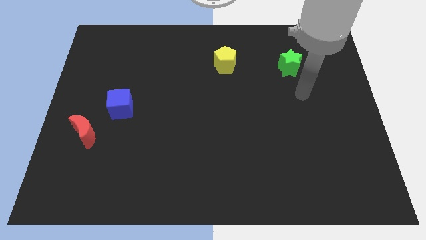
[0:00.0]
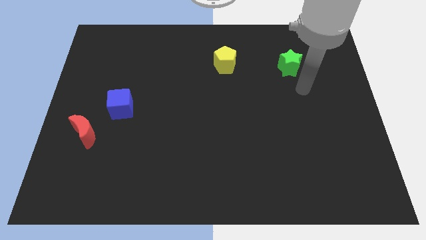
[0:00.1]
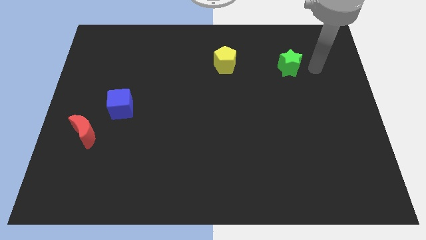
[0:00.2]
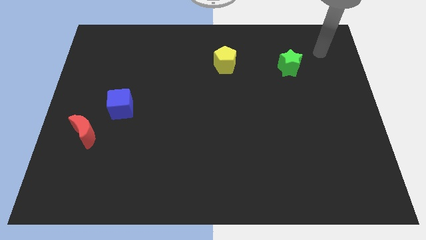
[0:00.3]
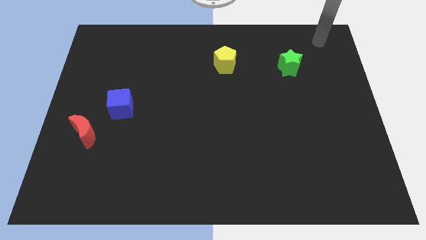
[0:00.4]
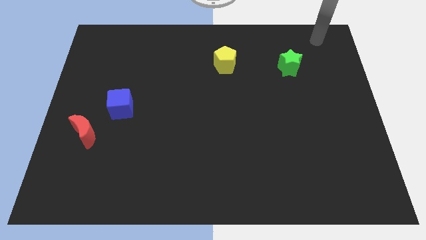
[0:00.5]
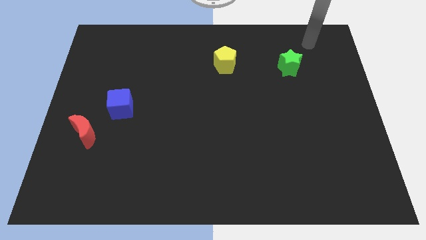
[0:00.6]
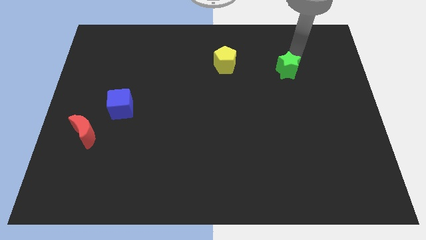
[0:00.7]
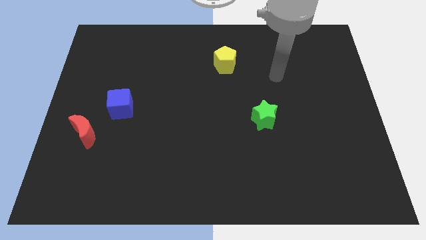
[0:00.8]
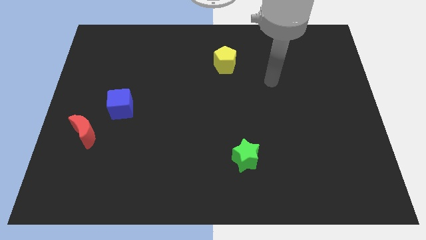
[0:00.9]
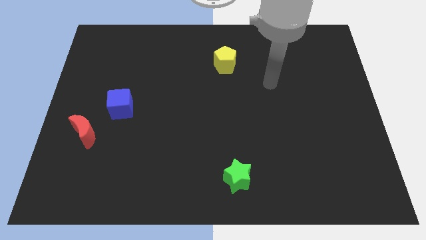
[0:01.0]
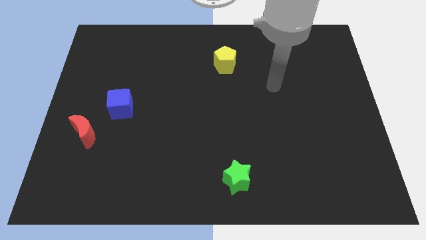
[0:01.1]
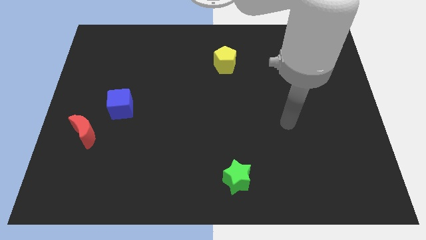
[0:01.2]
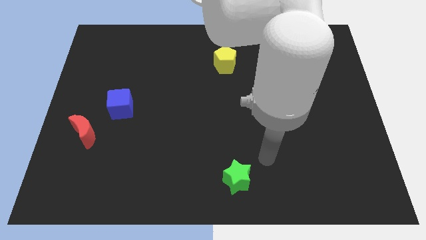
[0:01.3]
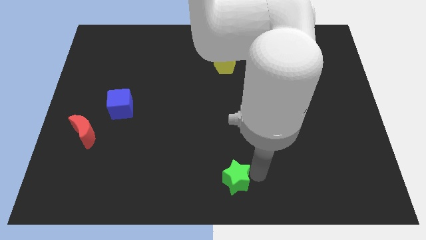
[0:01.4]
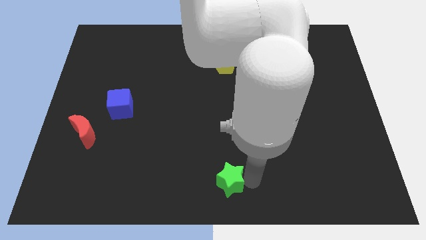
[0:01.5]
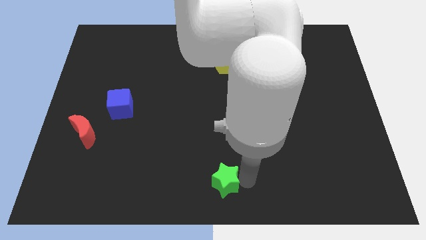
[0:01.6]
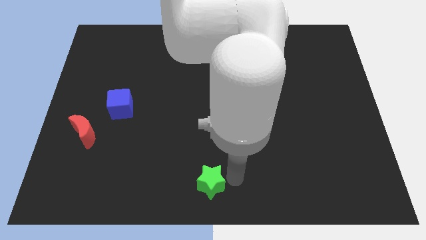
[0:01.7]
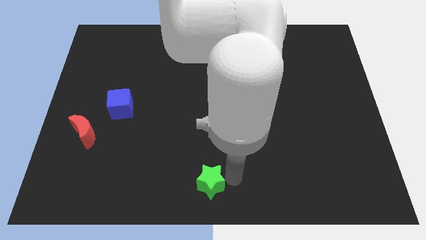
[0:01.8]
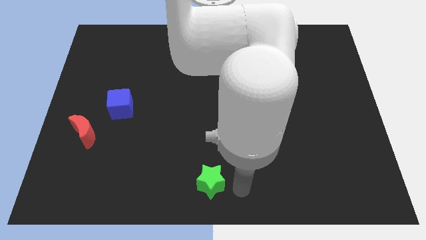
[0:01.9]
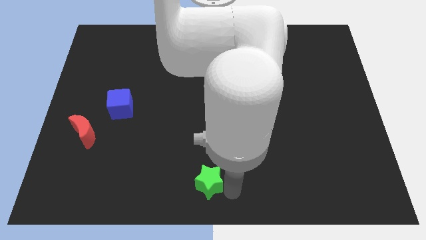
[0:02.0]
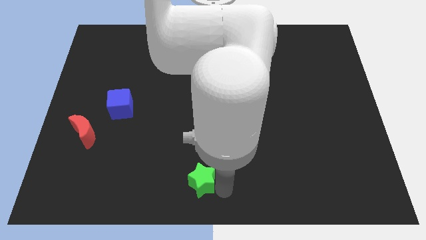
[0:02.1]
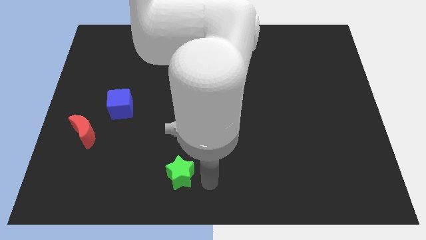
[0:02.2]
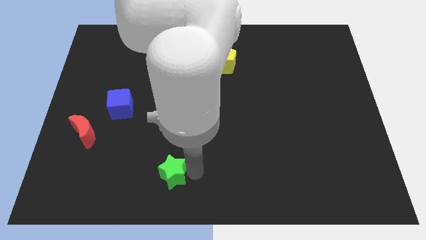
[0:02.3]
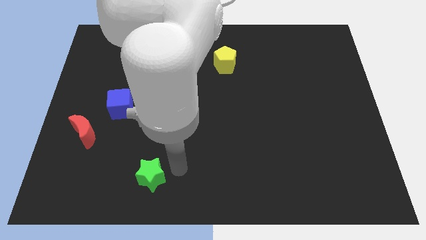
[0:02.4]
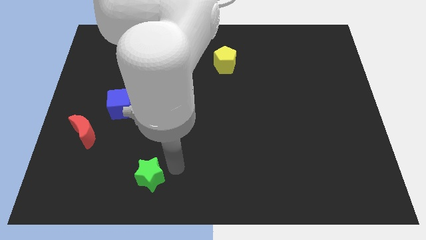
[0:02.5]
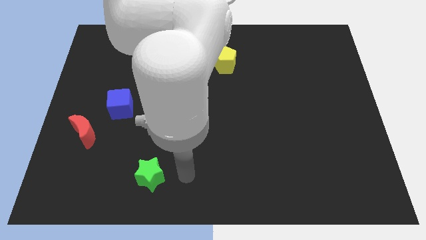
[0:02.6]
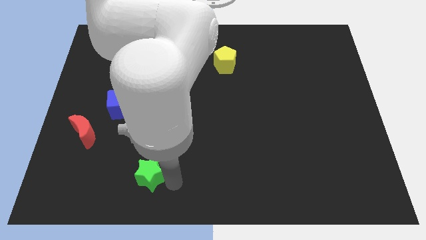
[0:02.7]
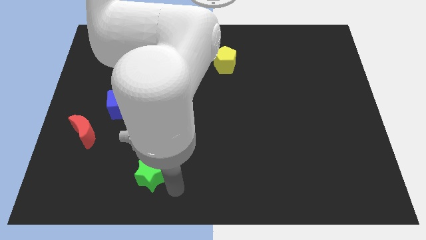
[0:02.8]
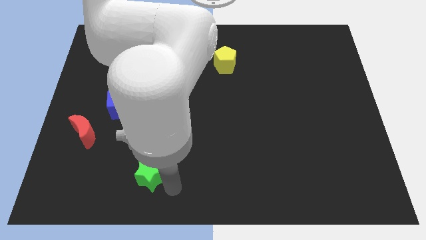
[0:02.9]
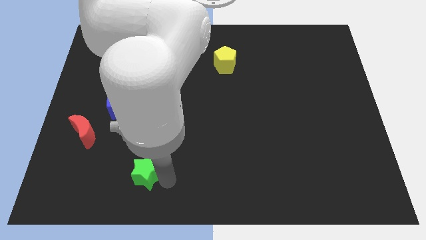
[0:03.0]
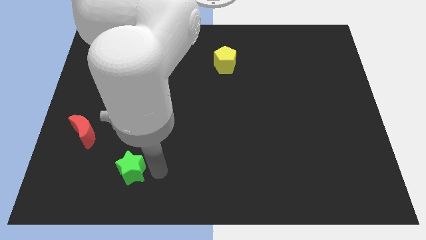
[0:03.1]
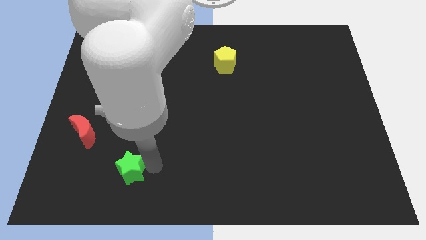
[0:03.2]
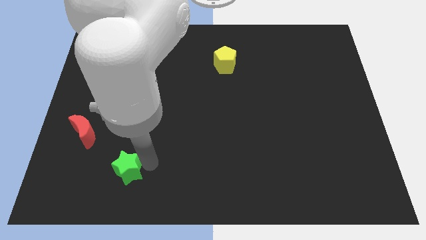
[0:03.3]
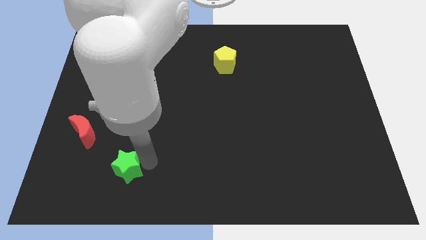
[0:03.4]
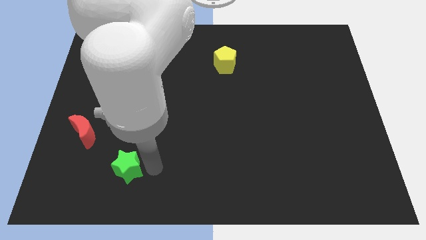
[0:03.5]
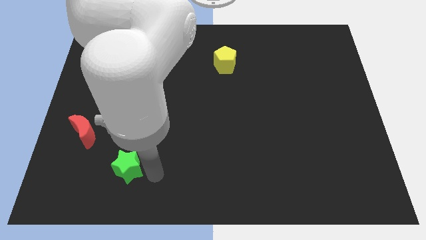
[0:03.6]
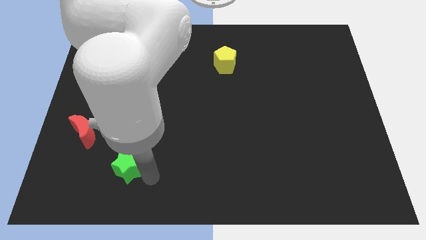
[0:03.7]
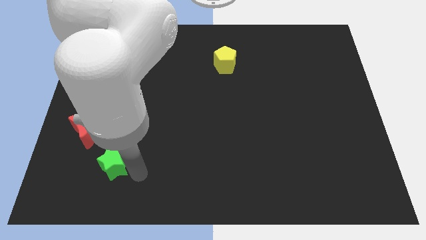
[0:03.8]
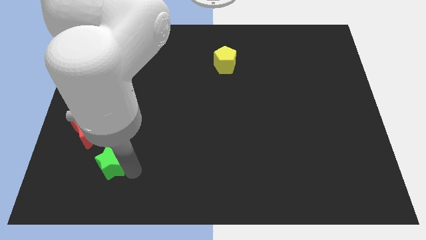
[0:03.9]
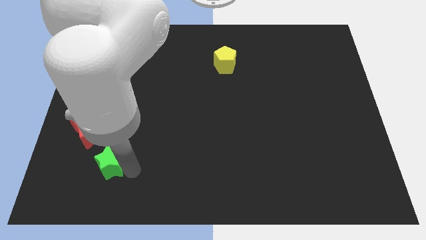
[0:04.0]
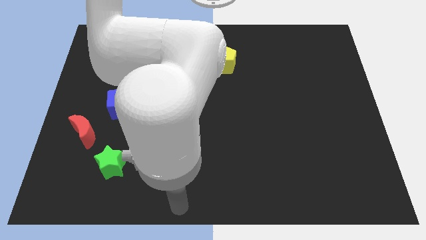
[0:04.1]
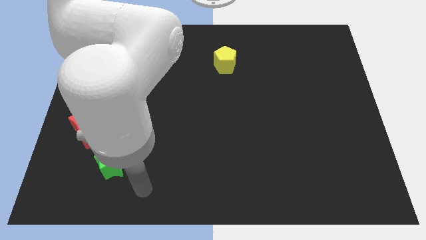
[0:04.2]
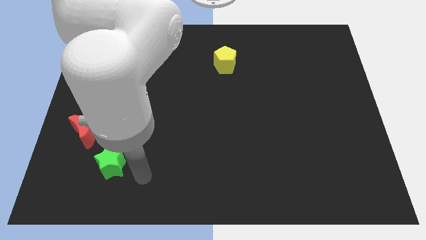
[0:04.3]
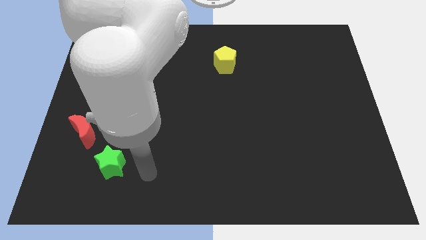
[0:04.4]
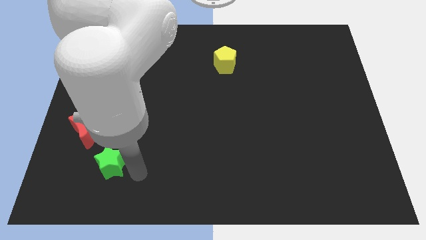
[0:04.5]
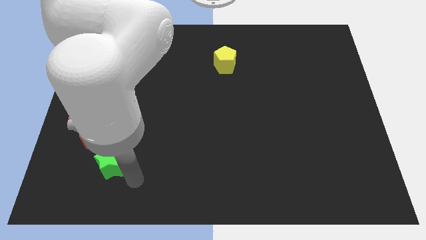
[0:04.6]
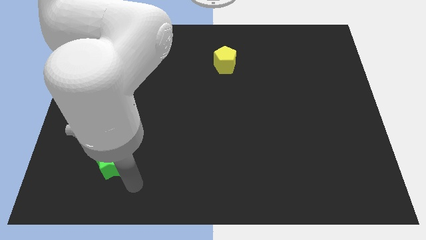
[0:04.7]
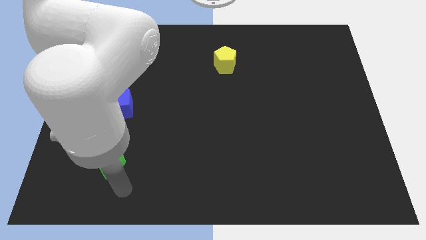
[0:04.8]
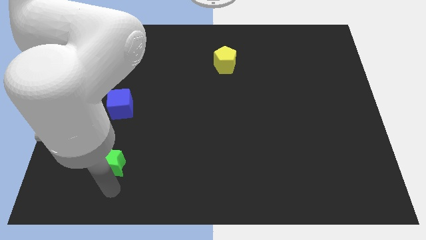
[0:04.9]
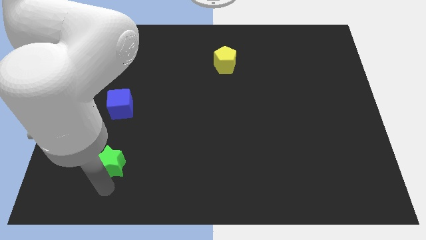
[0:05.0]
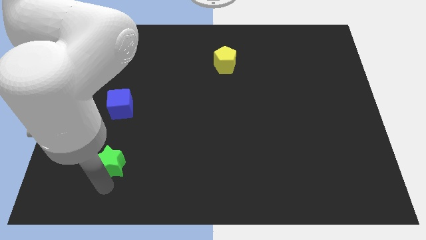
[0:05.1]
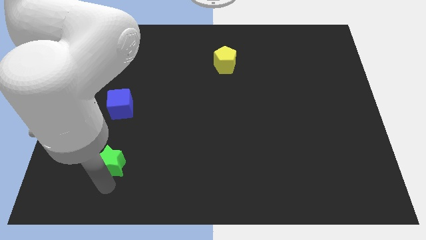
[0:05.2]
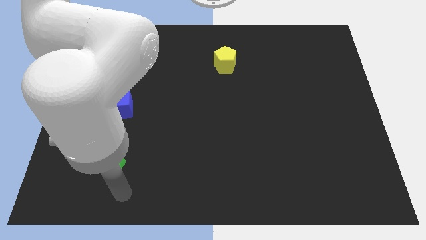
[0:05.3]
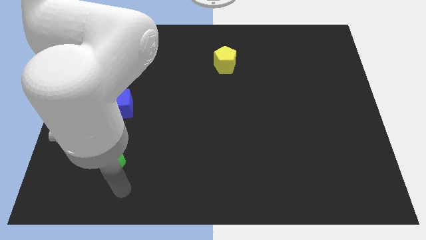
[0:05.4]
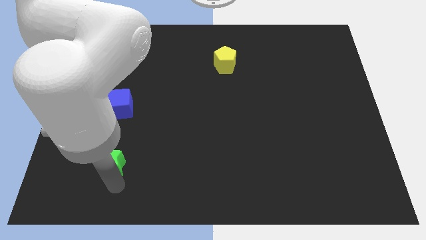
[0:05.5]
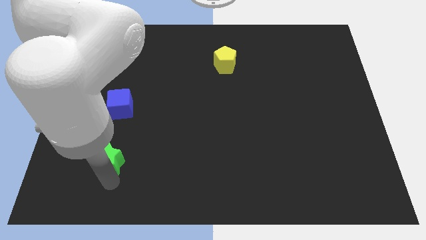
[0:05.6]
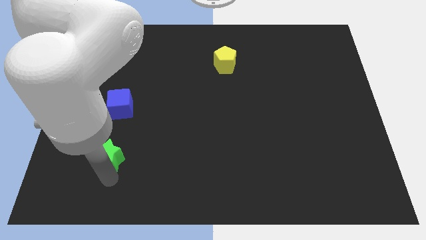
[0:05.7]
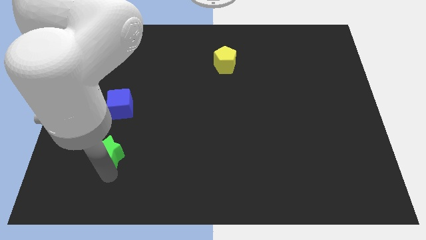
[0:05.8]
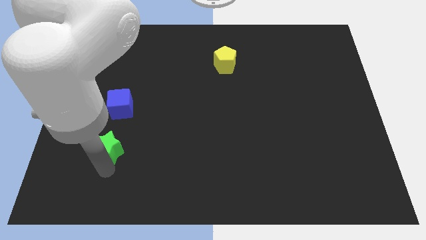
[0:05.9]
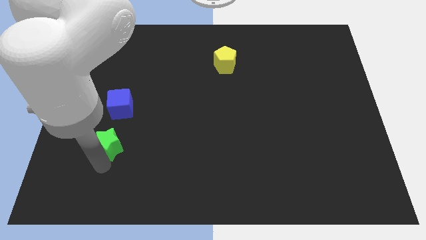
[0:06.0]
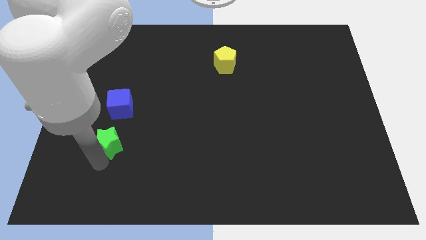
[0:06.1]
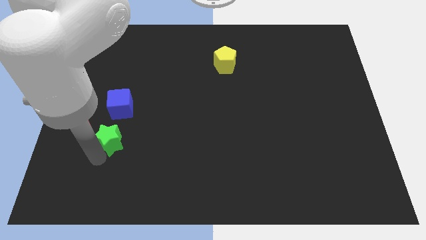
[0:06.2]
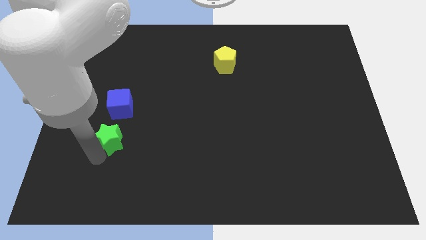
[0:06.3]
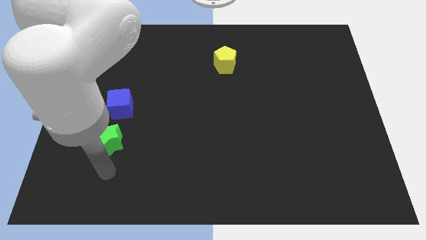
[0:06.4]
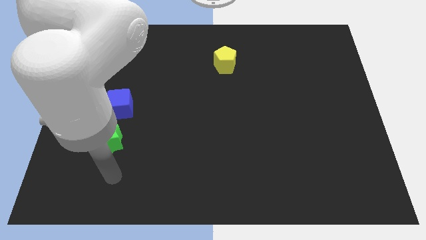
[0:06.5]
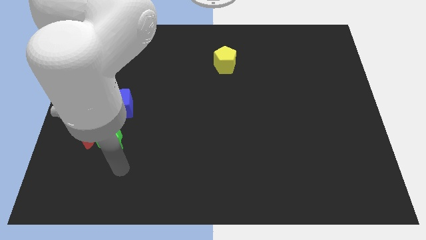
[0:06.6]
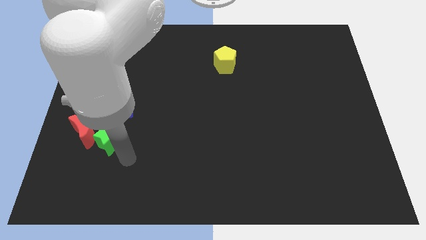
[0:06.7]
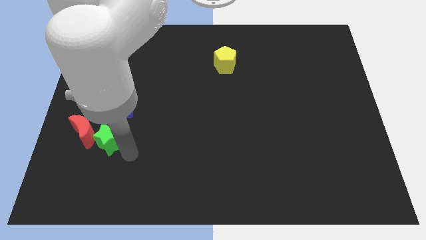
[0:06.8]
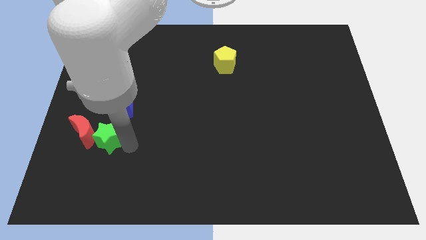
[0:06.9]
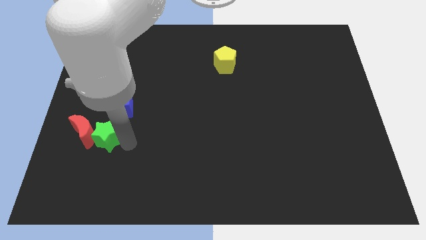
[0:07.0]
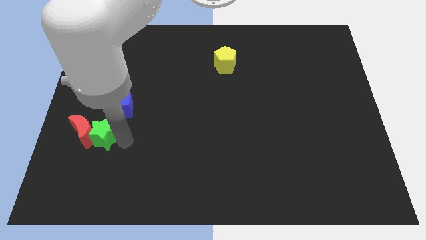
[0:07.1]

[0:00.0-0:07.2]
push the green block close to the moon

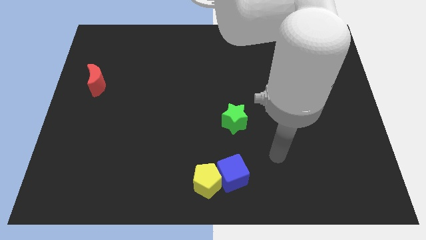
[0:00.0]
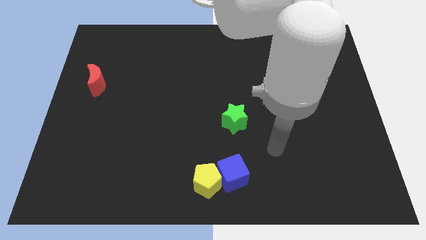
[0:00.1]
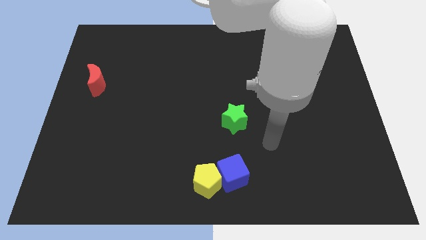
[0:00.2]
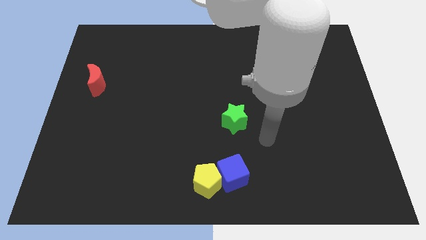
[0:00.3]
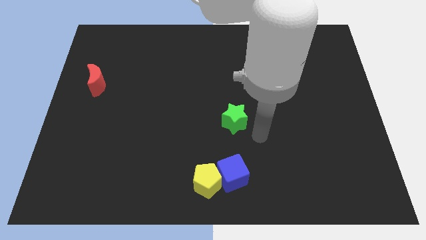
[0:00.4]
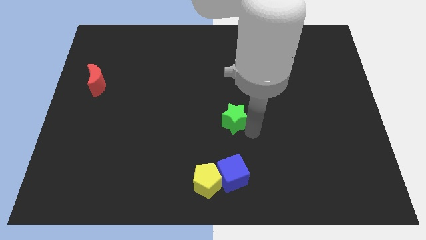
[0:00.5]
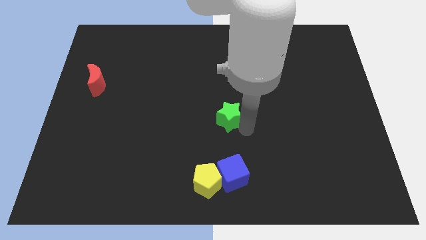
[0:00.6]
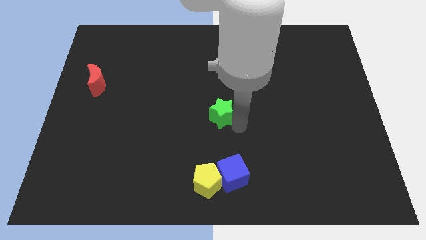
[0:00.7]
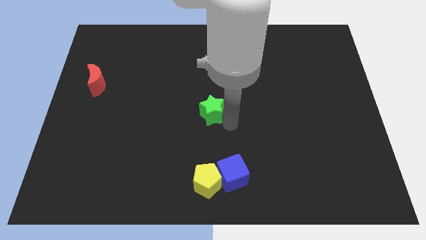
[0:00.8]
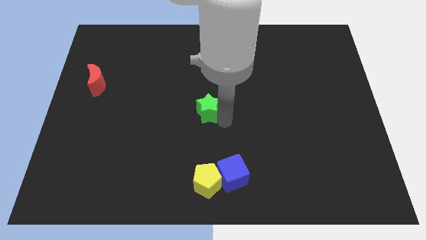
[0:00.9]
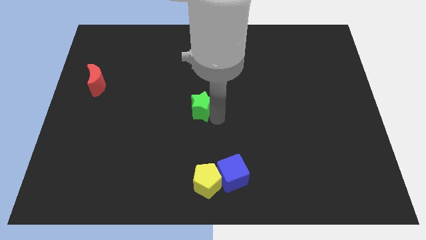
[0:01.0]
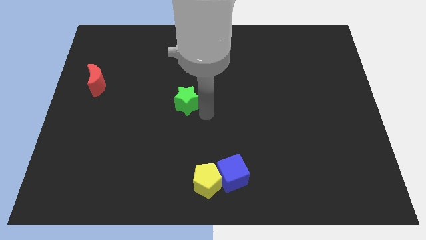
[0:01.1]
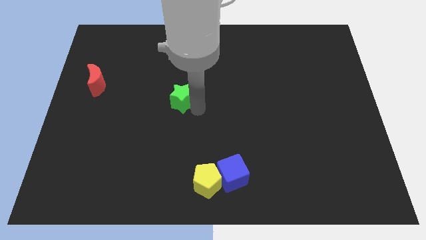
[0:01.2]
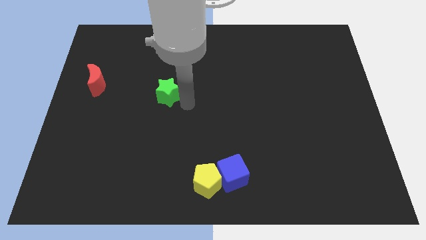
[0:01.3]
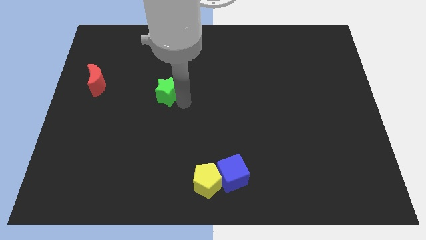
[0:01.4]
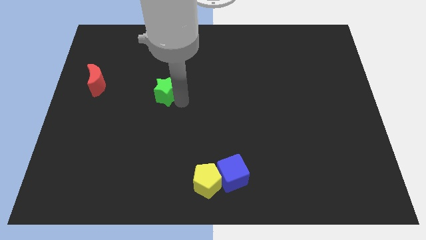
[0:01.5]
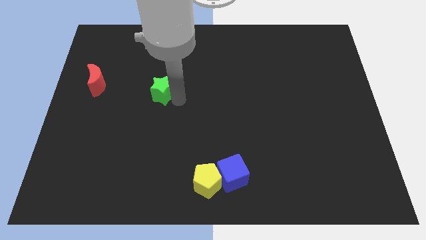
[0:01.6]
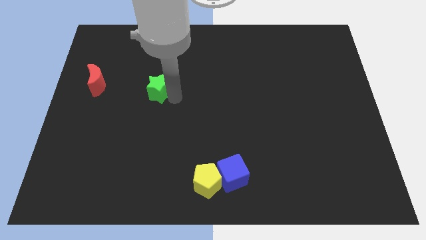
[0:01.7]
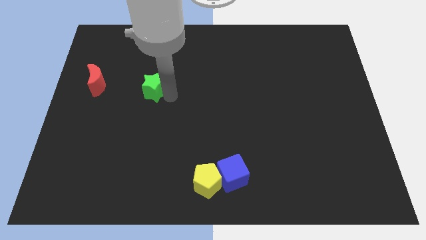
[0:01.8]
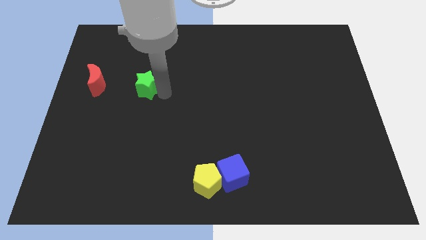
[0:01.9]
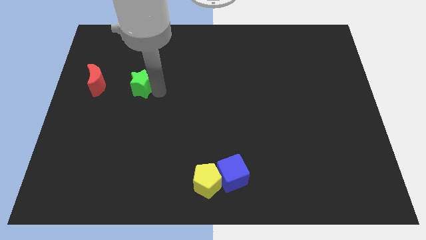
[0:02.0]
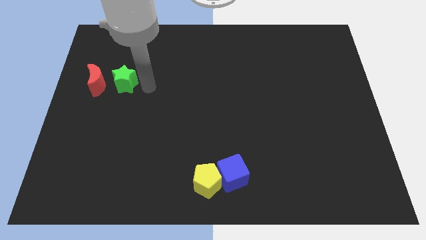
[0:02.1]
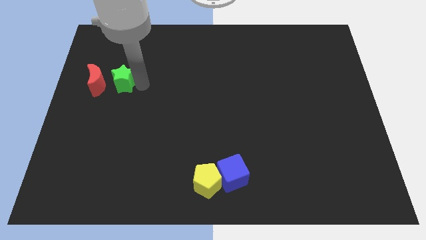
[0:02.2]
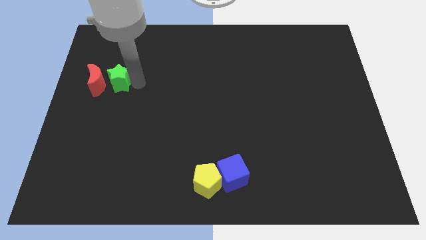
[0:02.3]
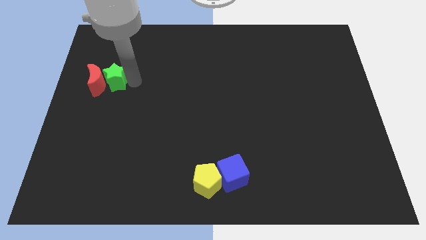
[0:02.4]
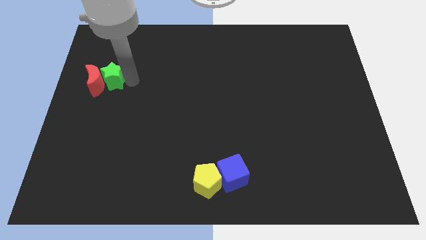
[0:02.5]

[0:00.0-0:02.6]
move the green block next to the red moon
